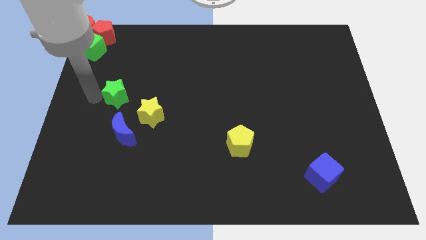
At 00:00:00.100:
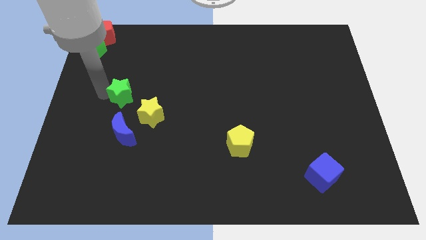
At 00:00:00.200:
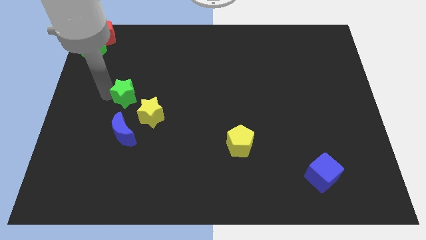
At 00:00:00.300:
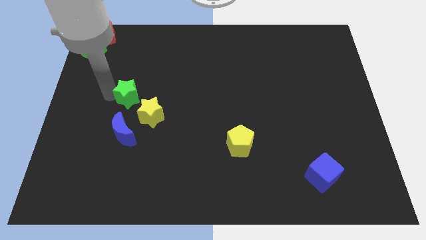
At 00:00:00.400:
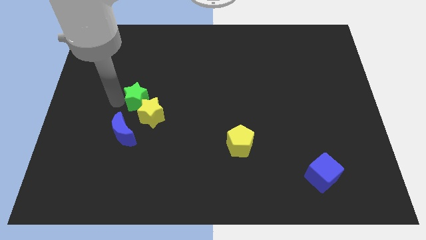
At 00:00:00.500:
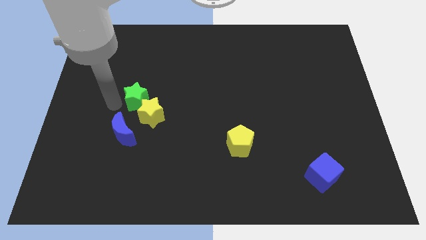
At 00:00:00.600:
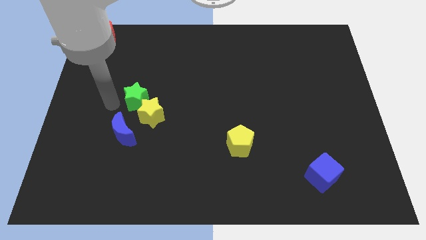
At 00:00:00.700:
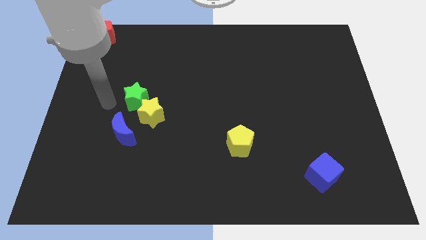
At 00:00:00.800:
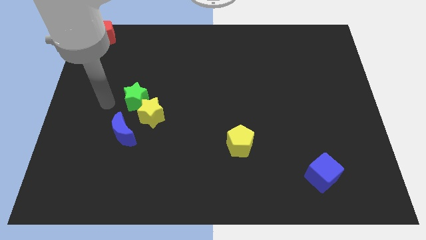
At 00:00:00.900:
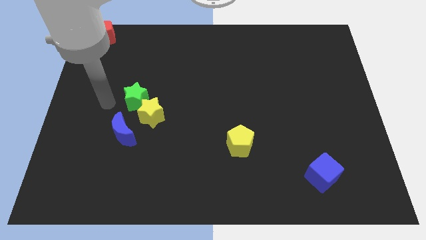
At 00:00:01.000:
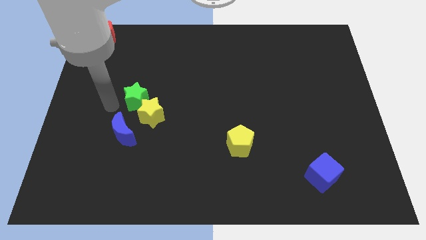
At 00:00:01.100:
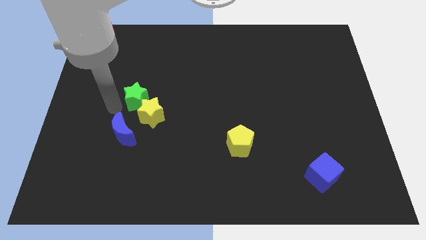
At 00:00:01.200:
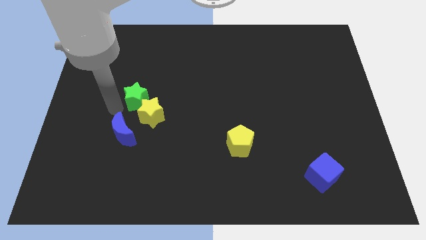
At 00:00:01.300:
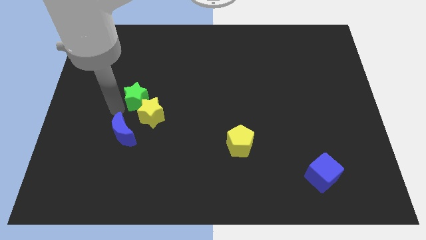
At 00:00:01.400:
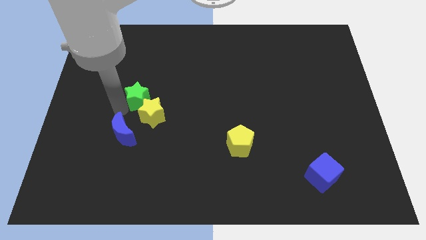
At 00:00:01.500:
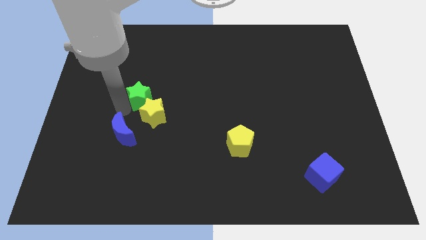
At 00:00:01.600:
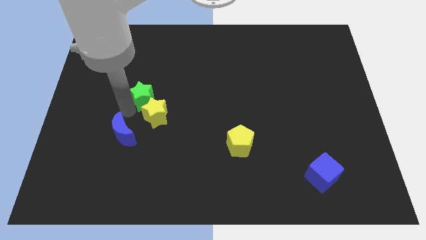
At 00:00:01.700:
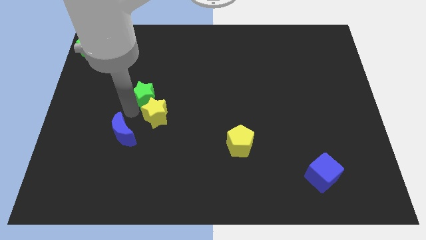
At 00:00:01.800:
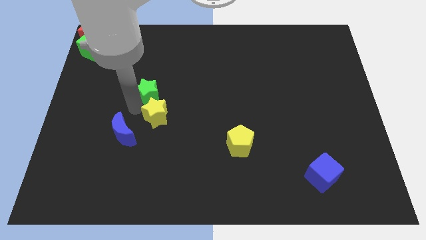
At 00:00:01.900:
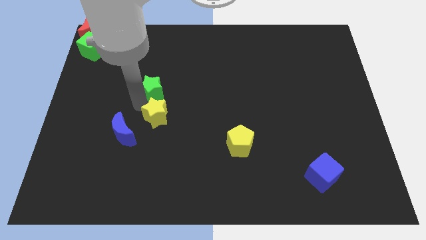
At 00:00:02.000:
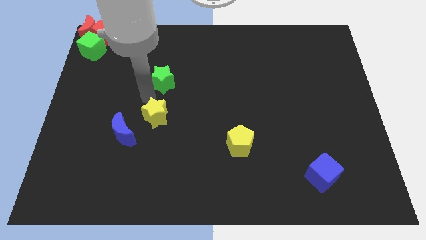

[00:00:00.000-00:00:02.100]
move the green star above the yellow star

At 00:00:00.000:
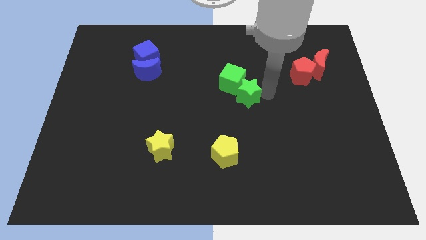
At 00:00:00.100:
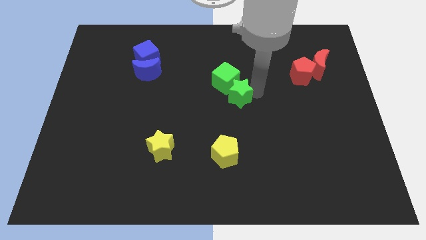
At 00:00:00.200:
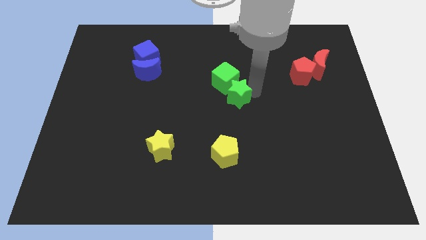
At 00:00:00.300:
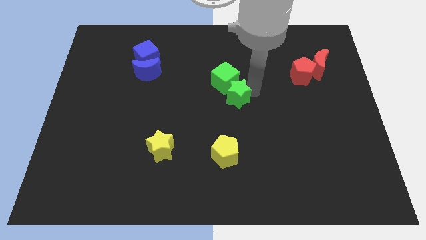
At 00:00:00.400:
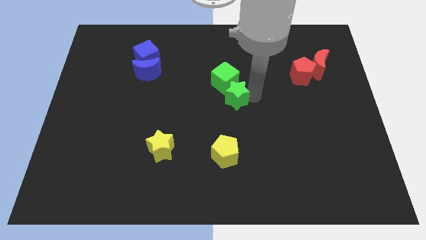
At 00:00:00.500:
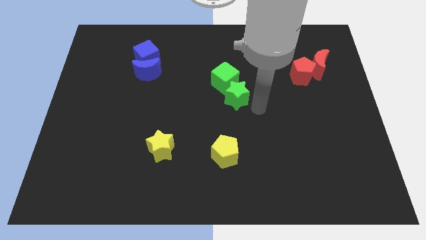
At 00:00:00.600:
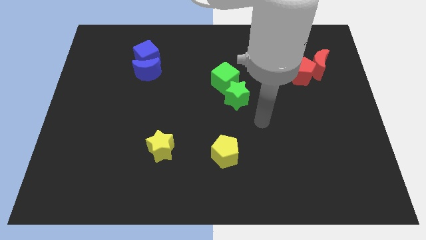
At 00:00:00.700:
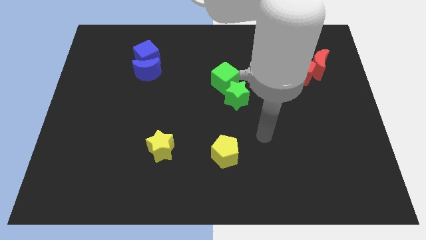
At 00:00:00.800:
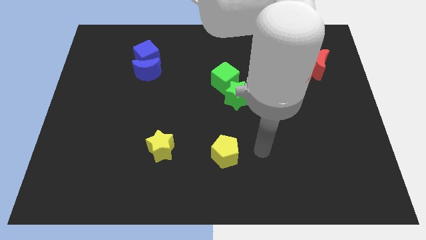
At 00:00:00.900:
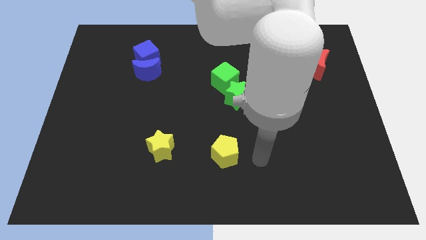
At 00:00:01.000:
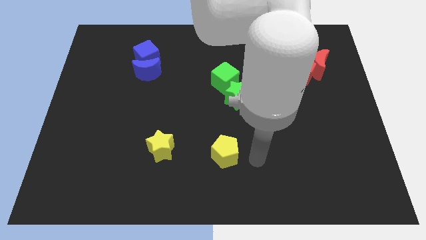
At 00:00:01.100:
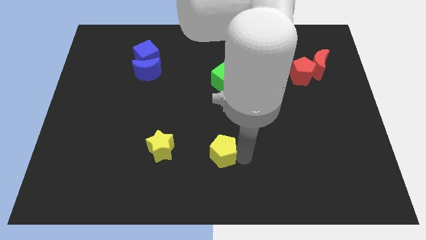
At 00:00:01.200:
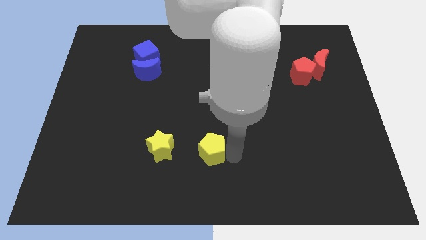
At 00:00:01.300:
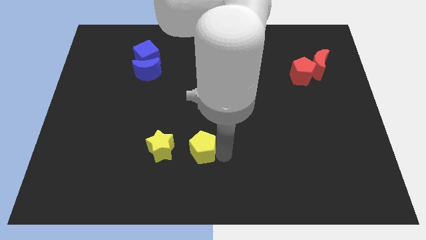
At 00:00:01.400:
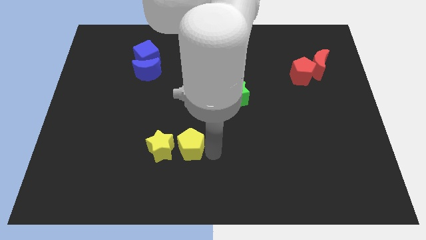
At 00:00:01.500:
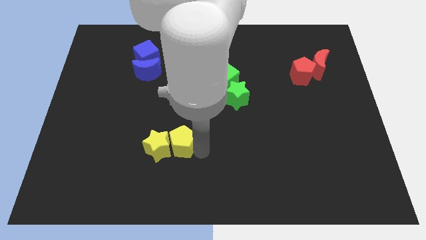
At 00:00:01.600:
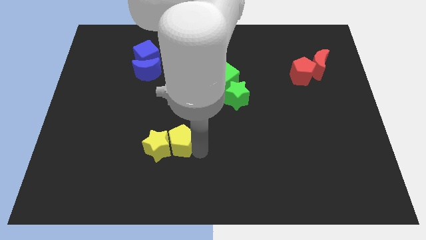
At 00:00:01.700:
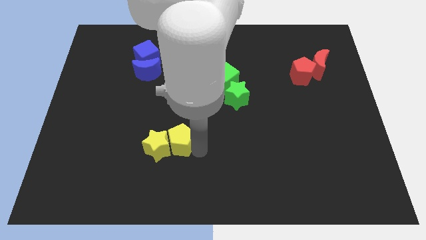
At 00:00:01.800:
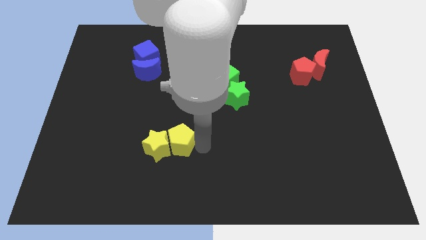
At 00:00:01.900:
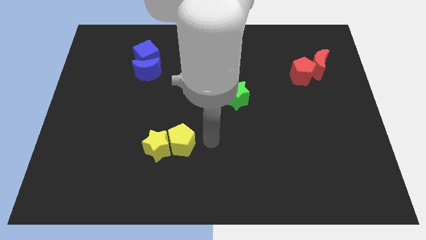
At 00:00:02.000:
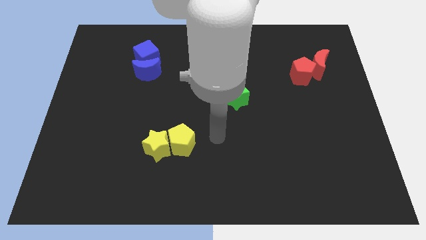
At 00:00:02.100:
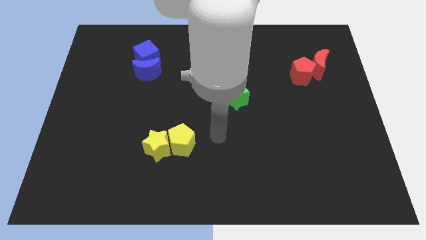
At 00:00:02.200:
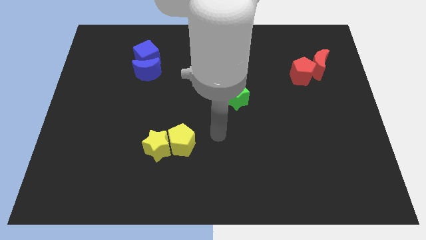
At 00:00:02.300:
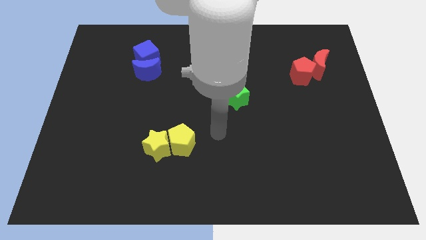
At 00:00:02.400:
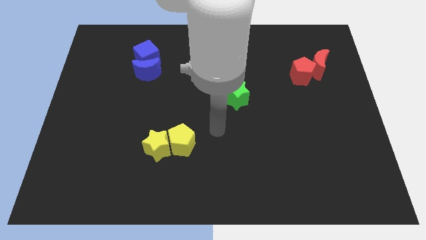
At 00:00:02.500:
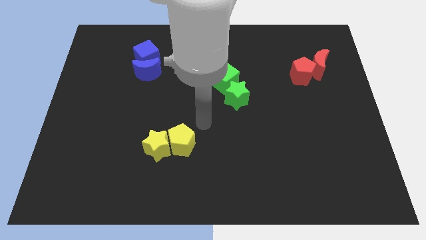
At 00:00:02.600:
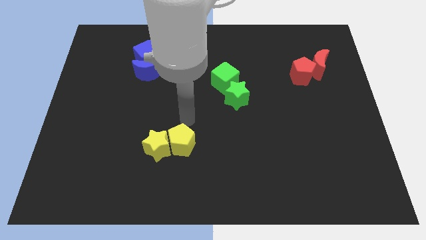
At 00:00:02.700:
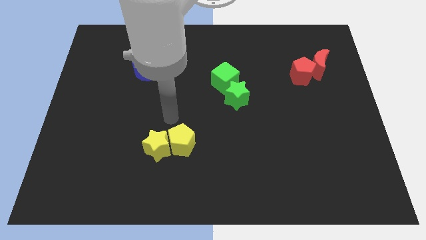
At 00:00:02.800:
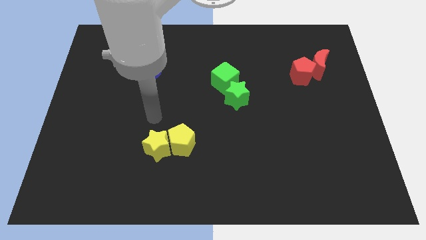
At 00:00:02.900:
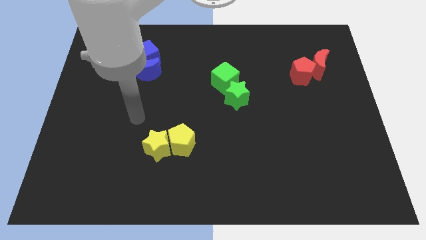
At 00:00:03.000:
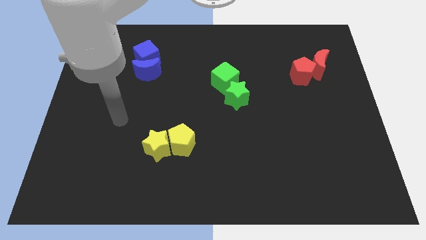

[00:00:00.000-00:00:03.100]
push the yellow pentagon into the yellow star

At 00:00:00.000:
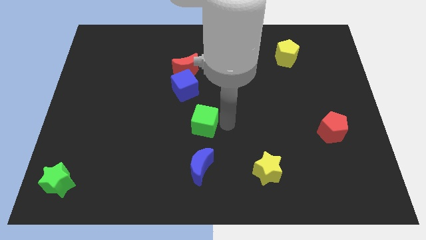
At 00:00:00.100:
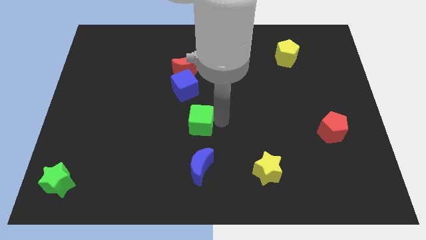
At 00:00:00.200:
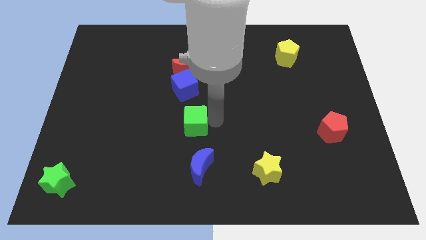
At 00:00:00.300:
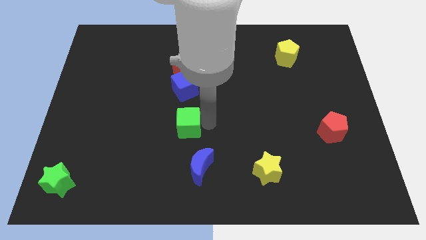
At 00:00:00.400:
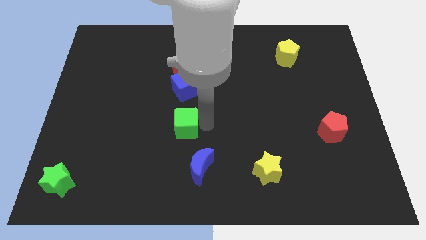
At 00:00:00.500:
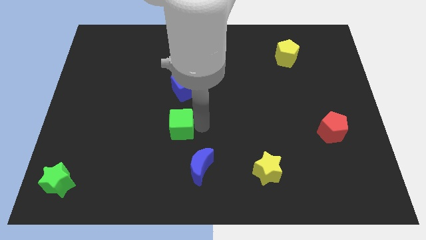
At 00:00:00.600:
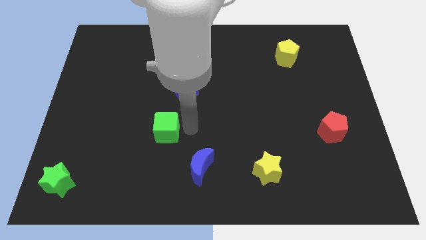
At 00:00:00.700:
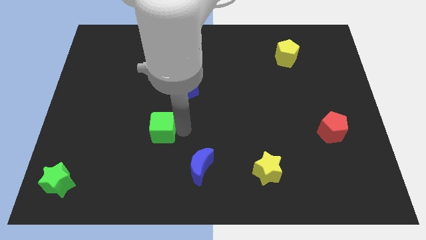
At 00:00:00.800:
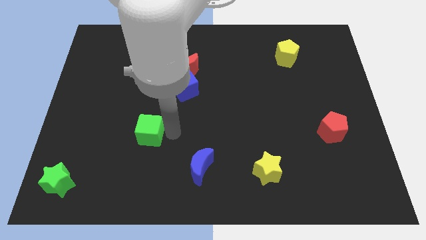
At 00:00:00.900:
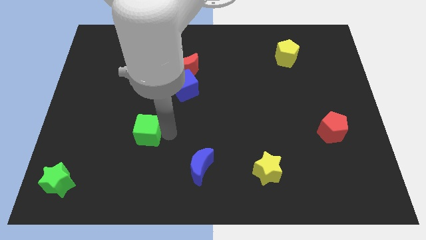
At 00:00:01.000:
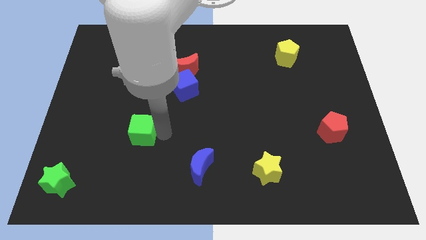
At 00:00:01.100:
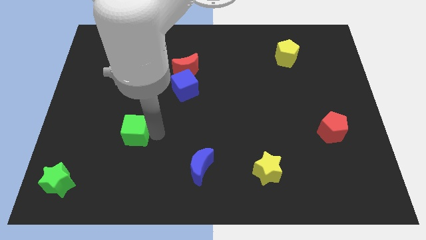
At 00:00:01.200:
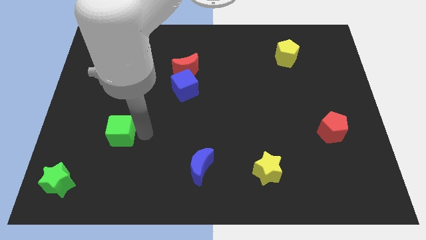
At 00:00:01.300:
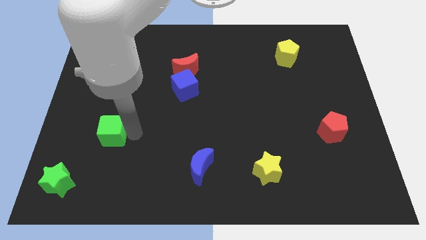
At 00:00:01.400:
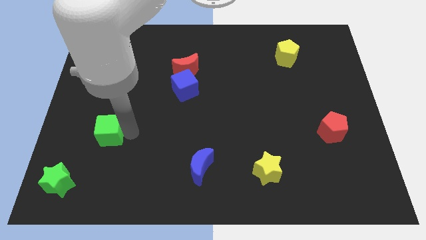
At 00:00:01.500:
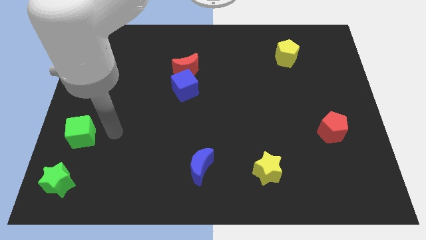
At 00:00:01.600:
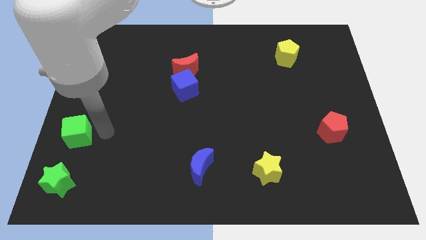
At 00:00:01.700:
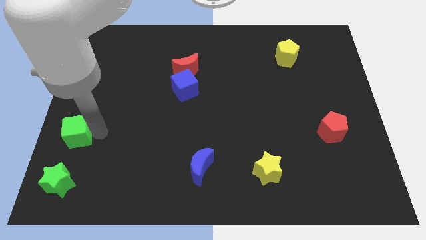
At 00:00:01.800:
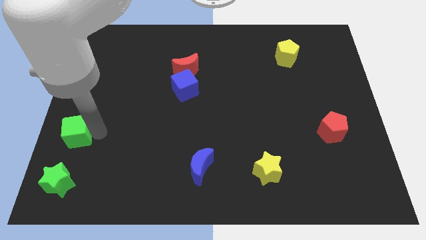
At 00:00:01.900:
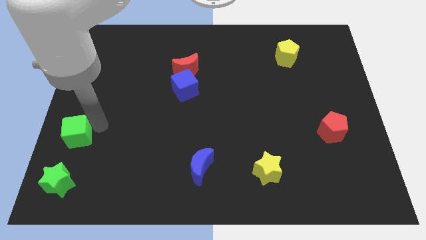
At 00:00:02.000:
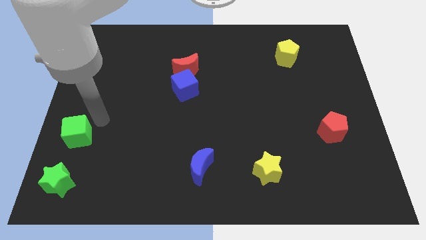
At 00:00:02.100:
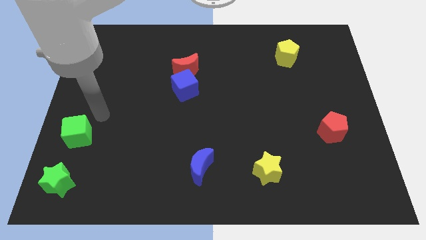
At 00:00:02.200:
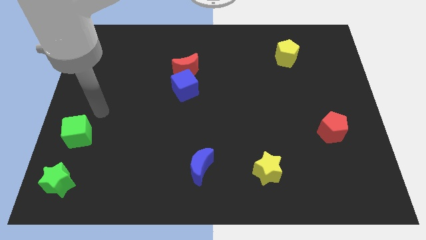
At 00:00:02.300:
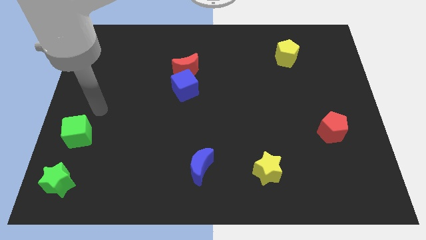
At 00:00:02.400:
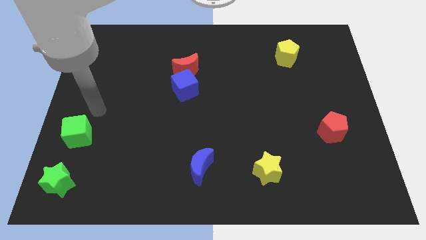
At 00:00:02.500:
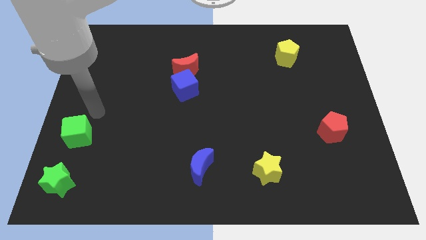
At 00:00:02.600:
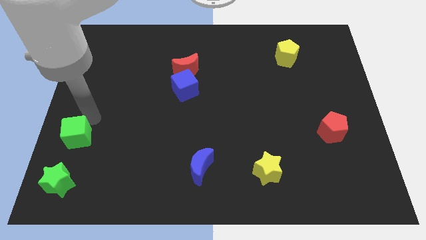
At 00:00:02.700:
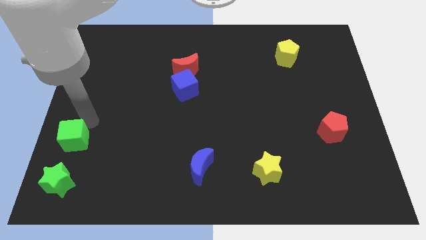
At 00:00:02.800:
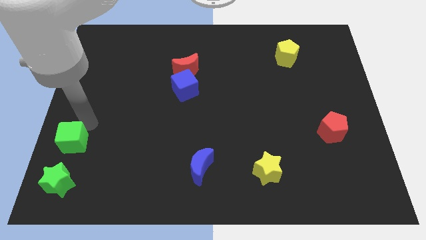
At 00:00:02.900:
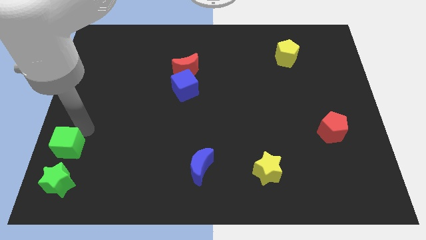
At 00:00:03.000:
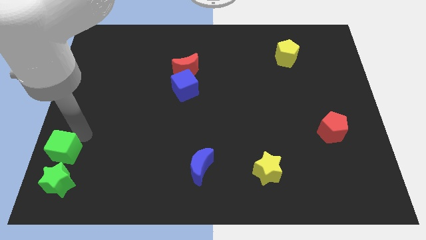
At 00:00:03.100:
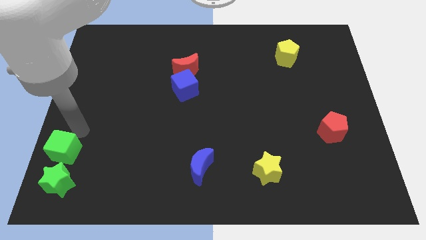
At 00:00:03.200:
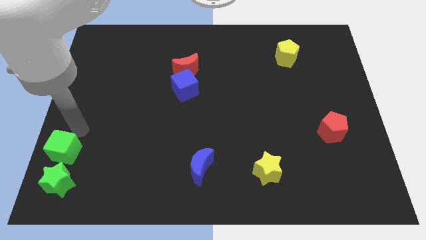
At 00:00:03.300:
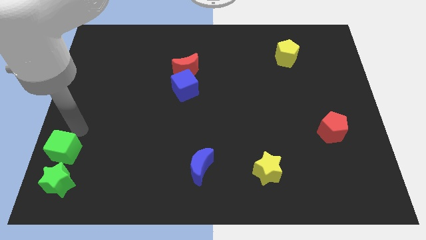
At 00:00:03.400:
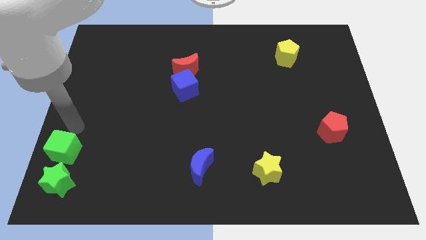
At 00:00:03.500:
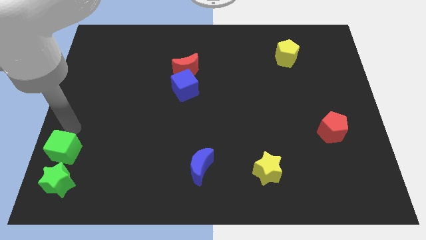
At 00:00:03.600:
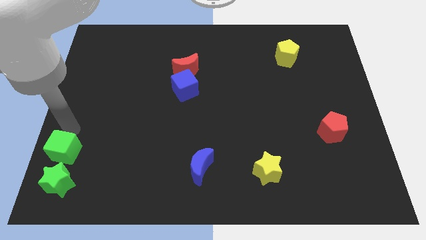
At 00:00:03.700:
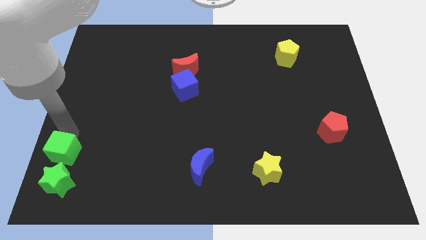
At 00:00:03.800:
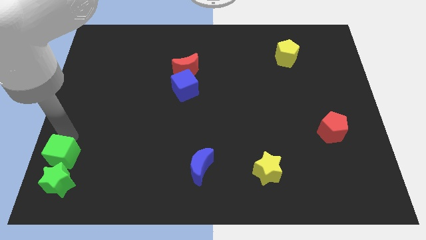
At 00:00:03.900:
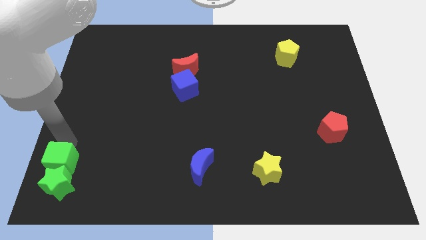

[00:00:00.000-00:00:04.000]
push the green cube to the top side of the green star
